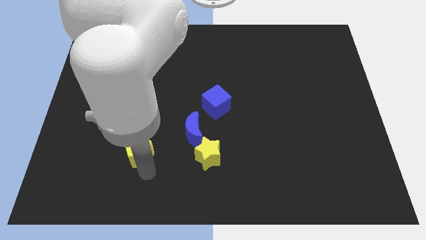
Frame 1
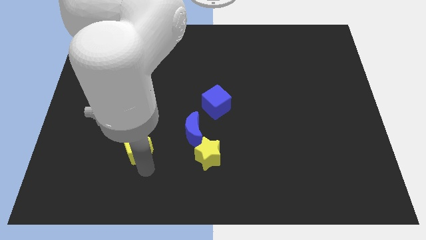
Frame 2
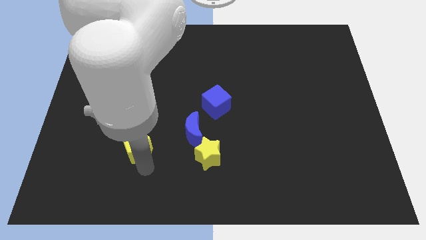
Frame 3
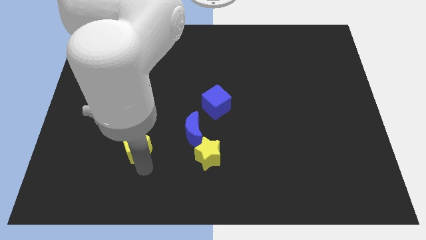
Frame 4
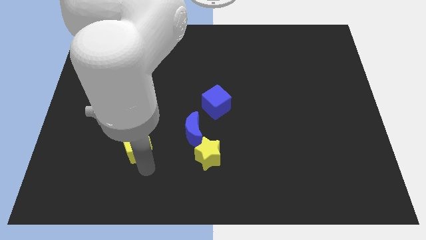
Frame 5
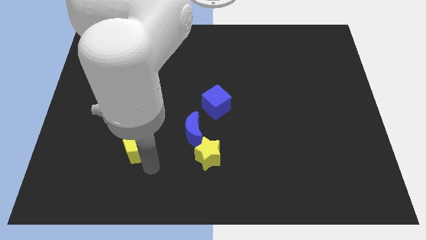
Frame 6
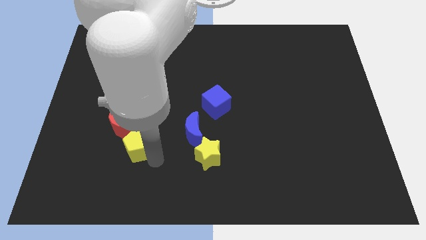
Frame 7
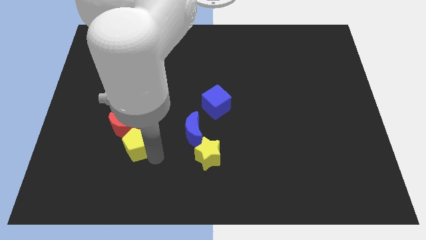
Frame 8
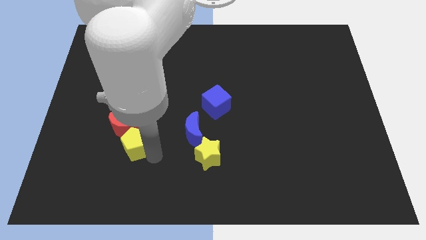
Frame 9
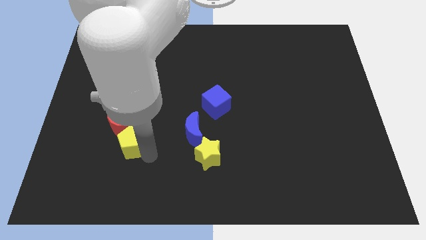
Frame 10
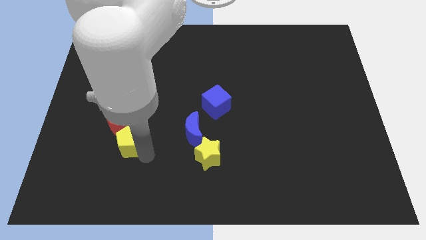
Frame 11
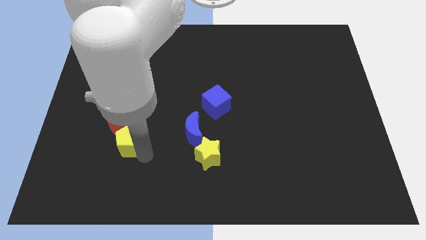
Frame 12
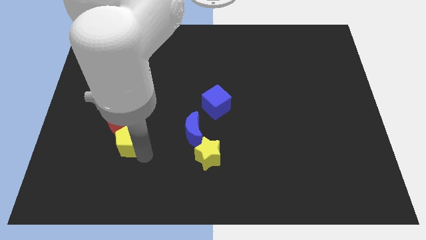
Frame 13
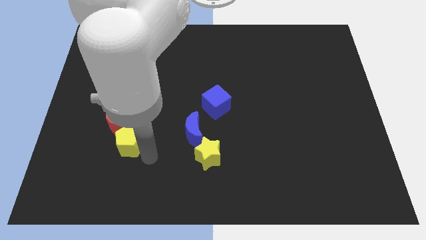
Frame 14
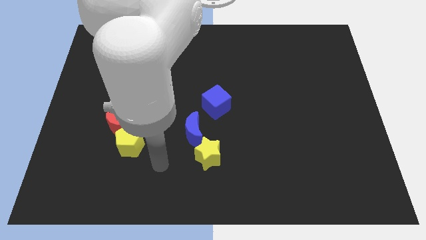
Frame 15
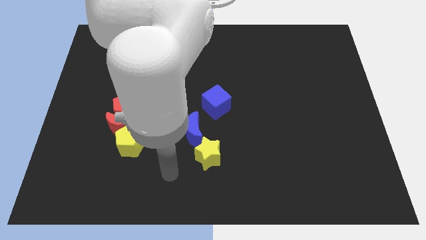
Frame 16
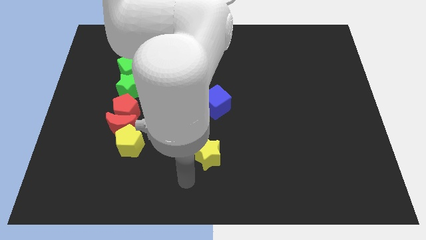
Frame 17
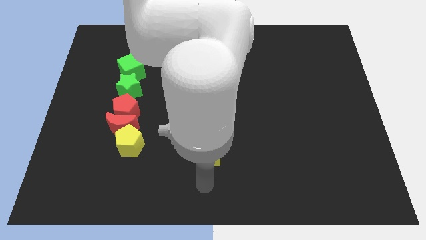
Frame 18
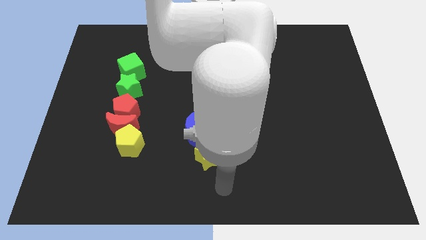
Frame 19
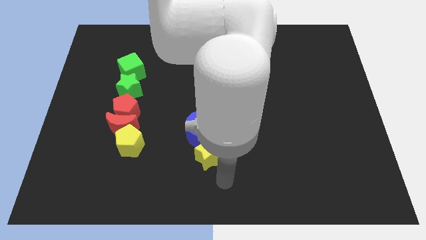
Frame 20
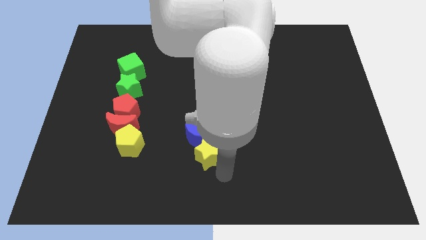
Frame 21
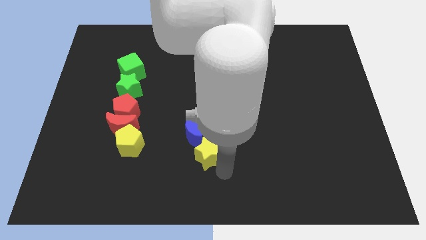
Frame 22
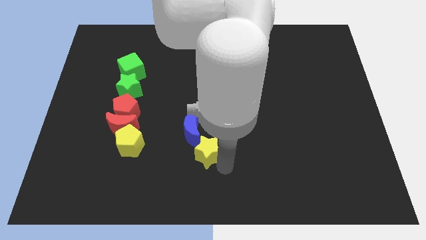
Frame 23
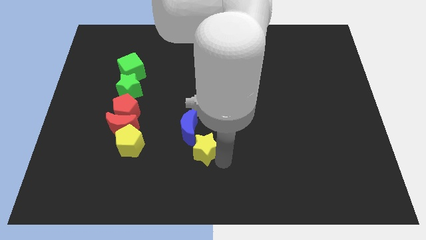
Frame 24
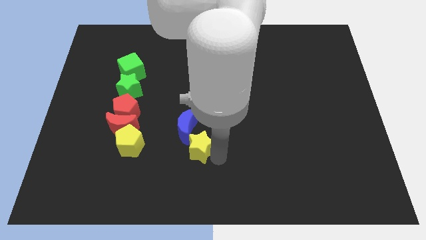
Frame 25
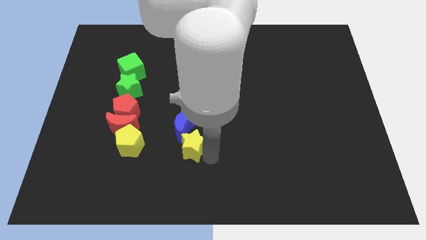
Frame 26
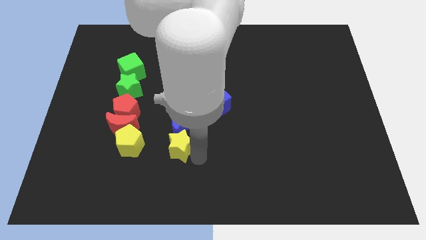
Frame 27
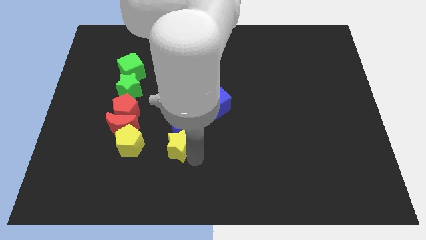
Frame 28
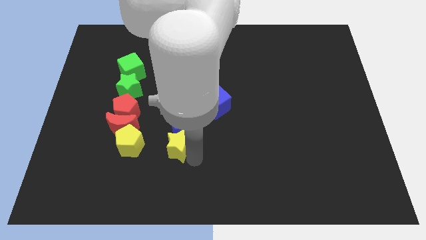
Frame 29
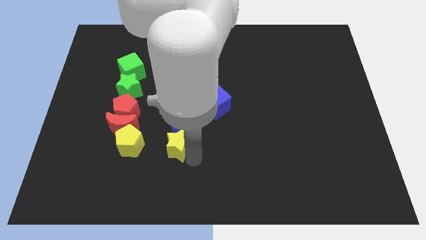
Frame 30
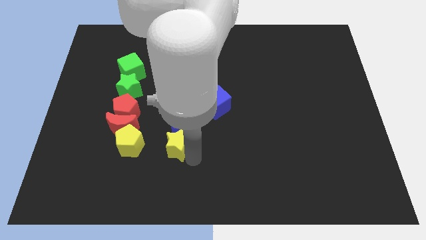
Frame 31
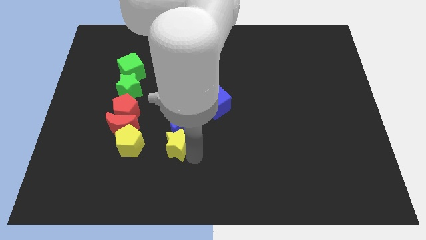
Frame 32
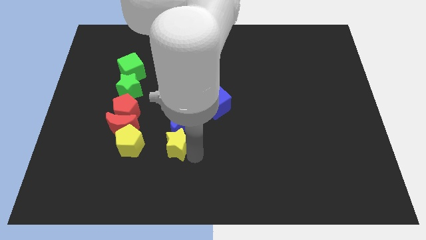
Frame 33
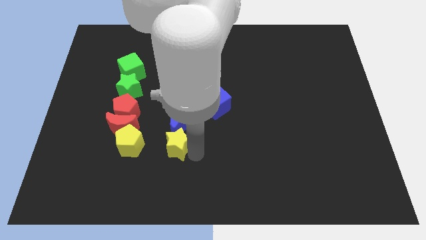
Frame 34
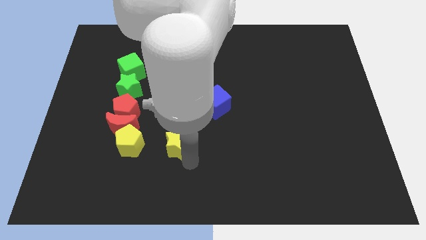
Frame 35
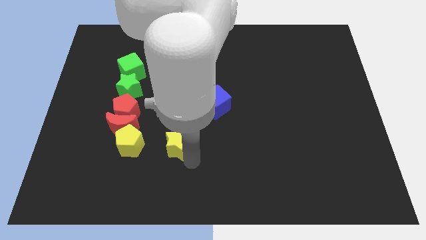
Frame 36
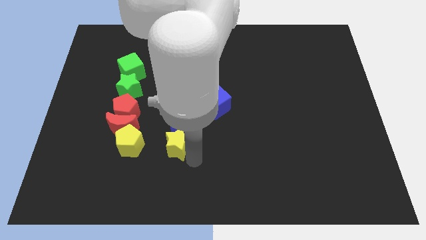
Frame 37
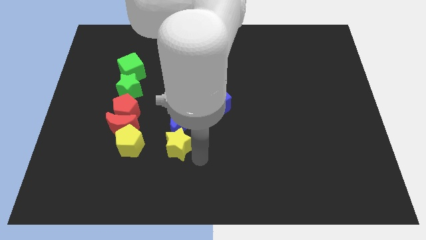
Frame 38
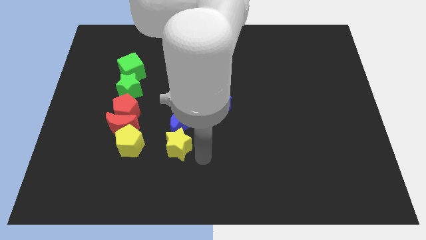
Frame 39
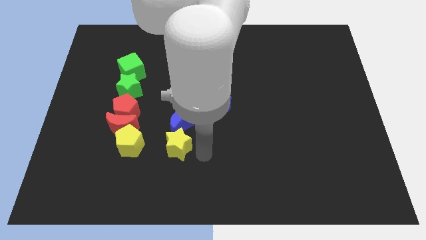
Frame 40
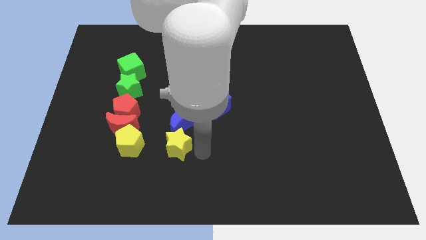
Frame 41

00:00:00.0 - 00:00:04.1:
place yellow star to the right of yellow pentagon

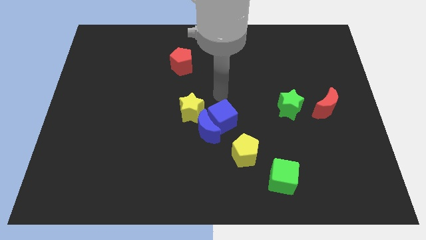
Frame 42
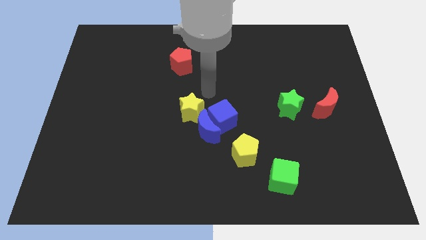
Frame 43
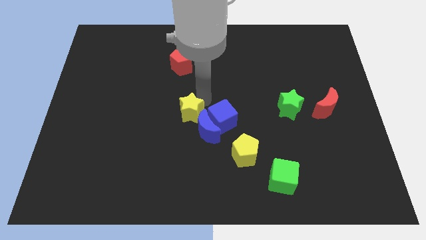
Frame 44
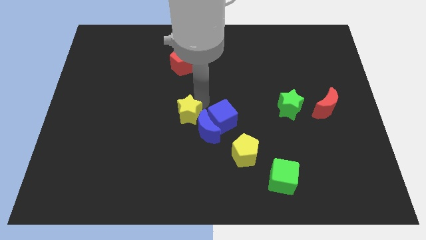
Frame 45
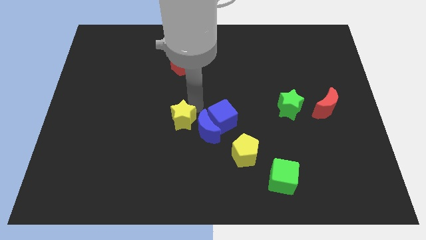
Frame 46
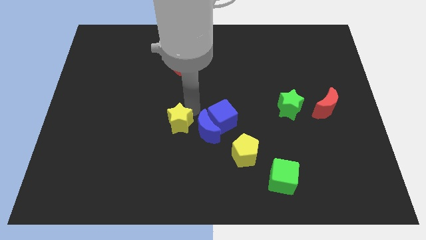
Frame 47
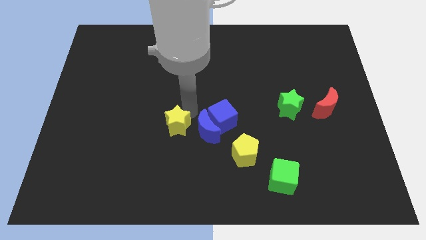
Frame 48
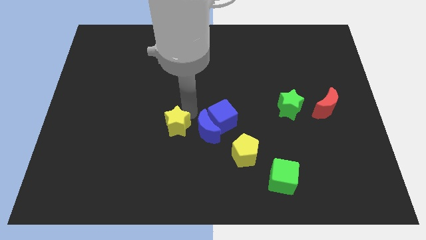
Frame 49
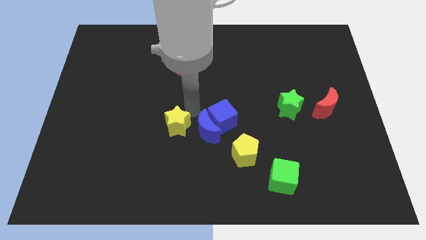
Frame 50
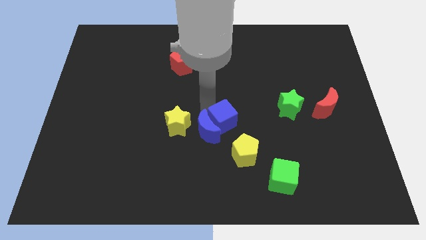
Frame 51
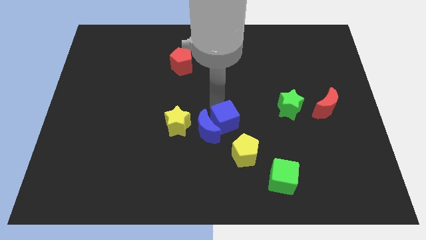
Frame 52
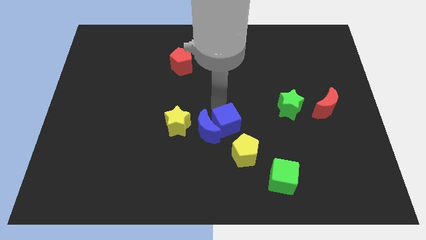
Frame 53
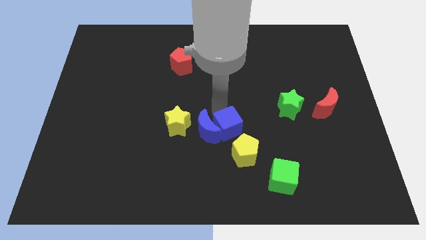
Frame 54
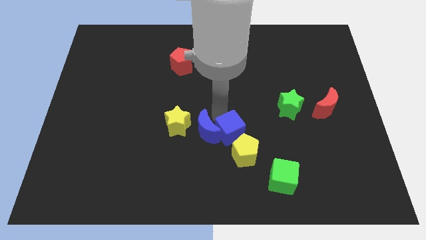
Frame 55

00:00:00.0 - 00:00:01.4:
place the yellow star left to the blue moon

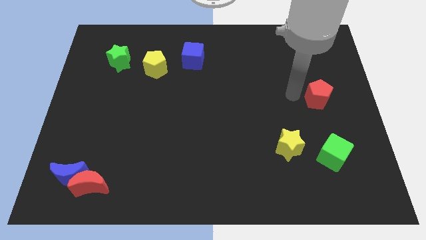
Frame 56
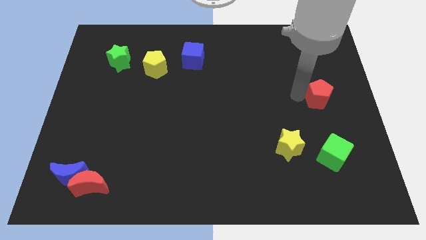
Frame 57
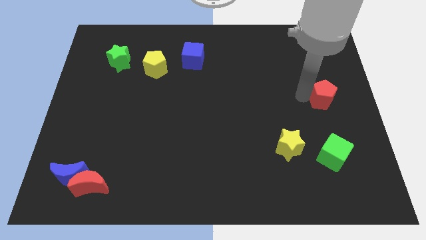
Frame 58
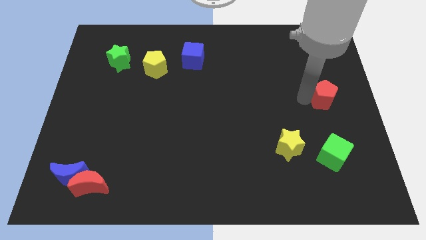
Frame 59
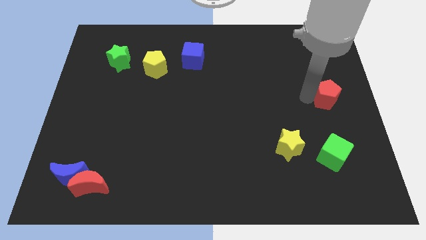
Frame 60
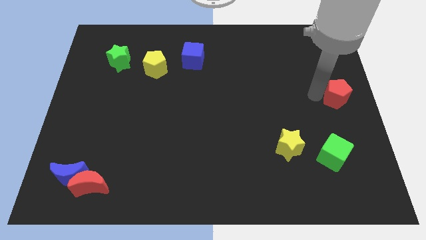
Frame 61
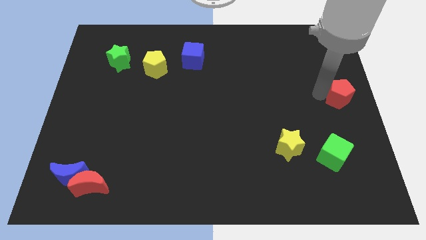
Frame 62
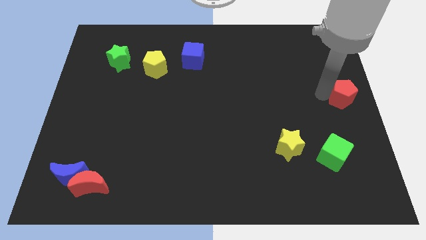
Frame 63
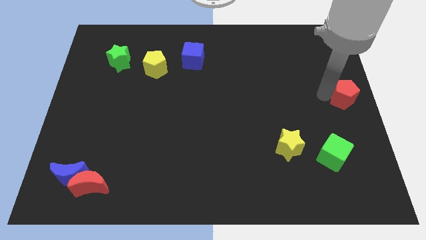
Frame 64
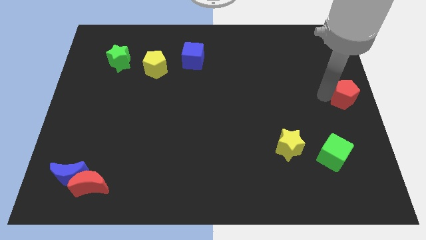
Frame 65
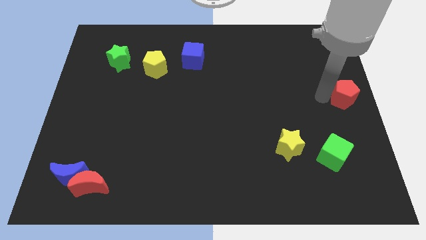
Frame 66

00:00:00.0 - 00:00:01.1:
push red pentagon to the right center of the board

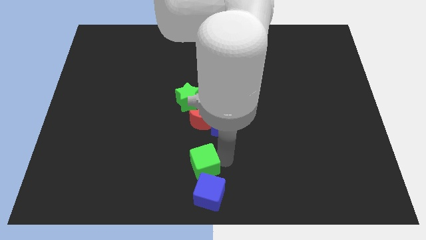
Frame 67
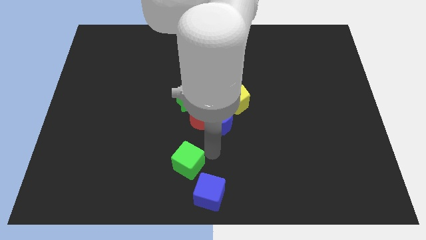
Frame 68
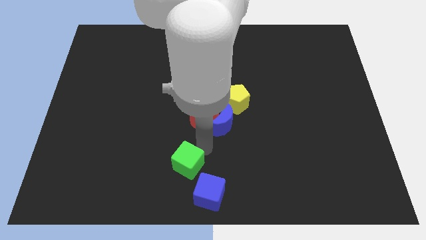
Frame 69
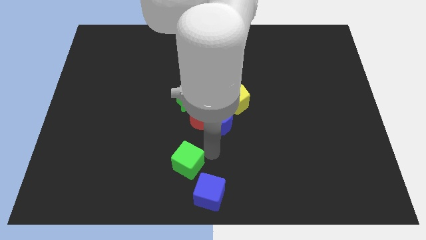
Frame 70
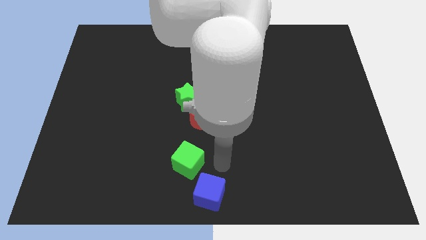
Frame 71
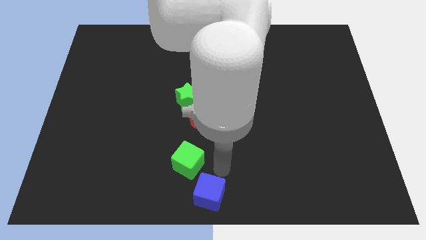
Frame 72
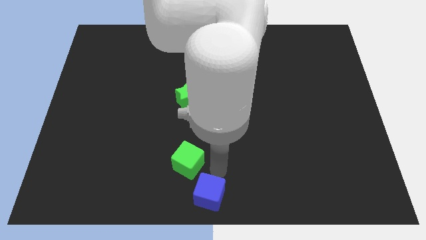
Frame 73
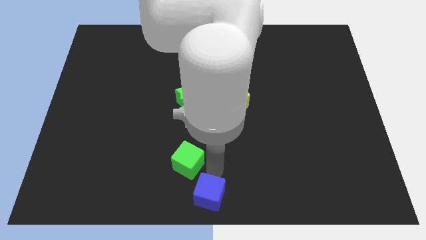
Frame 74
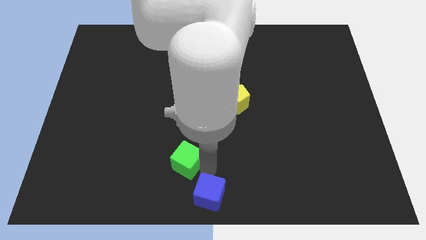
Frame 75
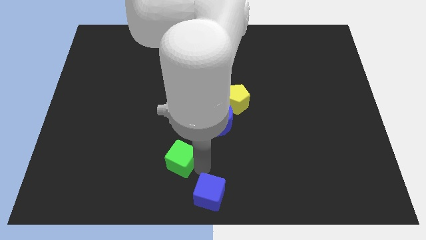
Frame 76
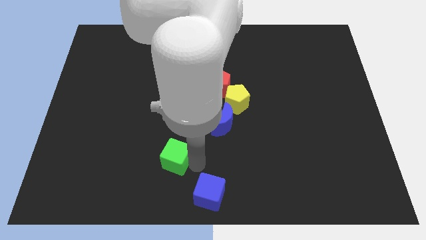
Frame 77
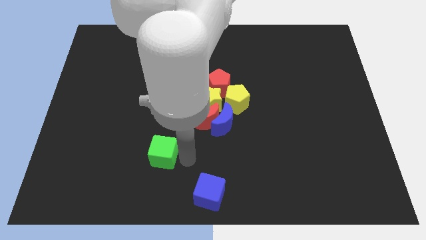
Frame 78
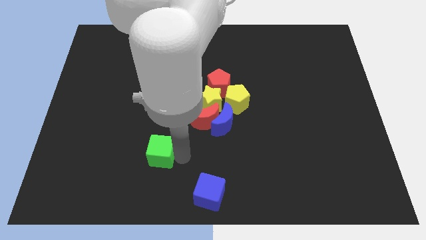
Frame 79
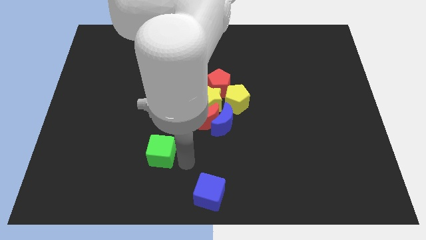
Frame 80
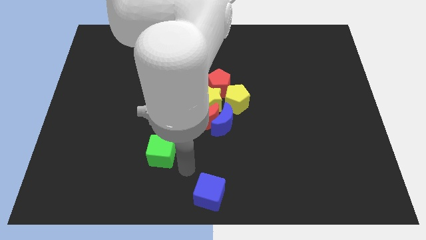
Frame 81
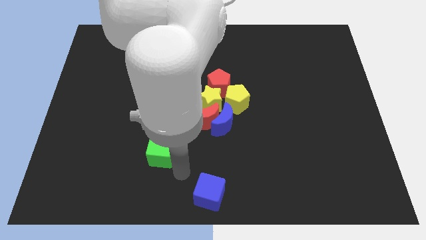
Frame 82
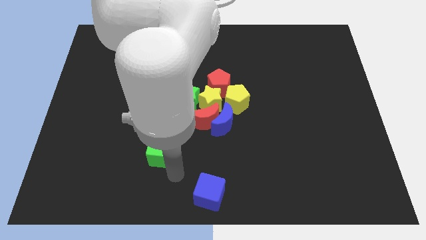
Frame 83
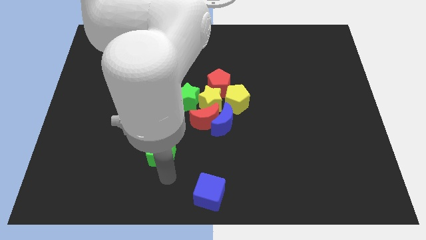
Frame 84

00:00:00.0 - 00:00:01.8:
separate the blue cube and the green cube

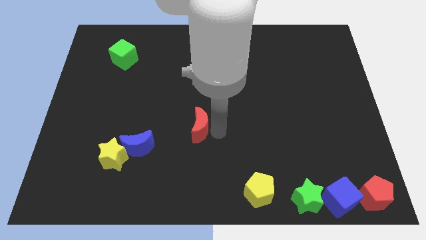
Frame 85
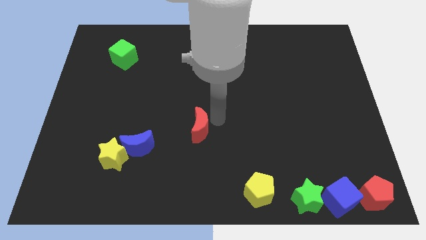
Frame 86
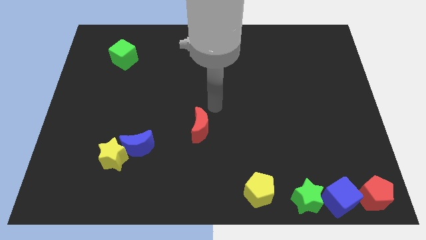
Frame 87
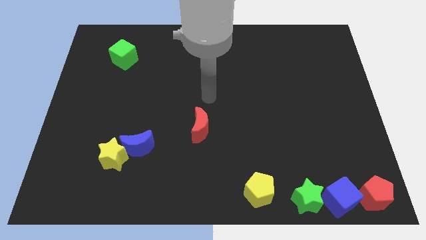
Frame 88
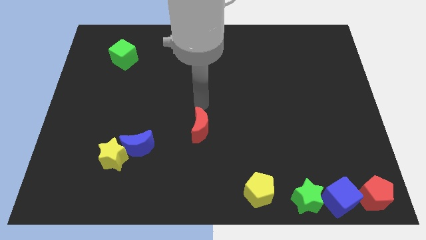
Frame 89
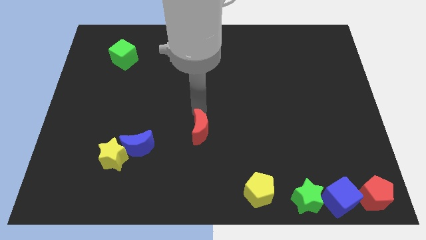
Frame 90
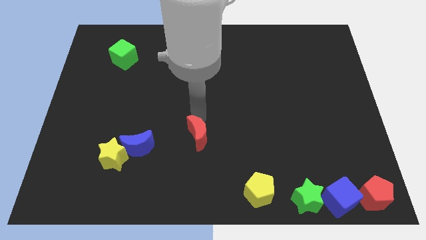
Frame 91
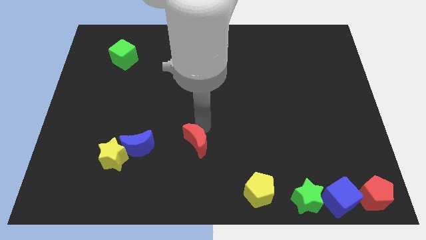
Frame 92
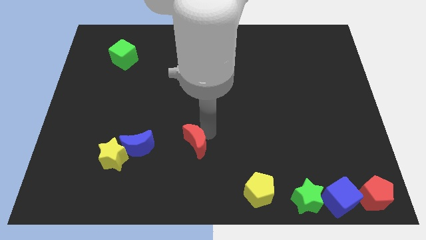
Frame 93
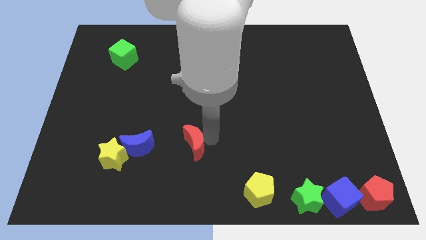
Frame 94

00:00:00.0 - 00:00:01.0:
put the red moon adjacent to the blue crescent
